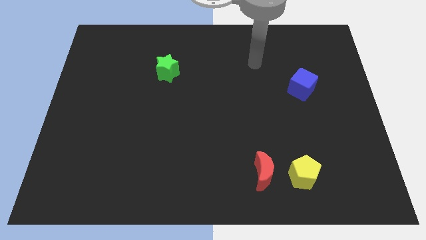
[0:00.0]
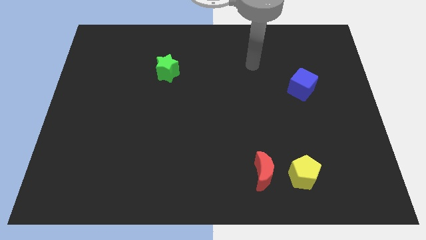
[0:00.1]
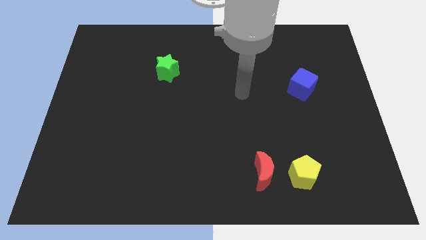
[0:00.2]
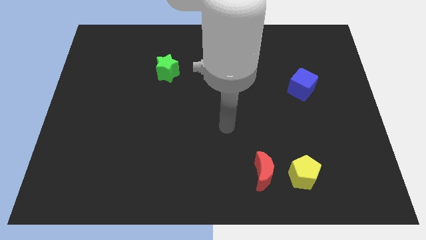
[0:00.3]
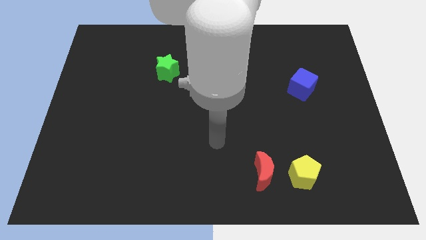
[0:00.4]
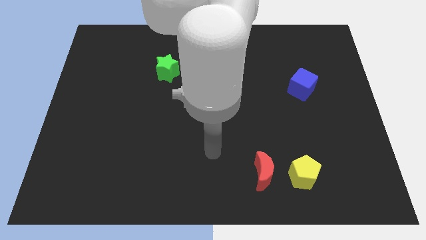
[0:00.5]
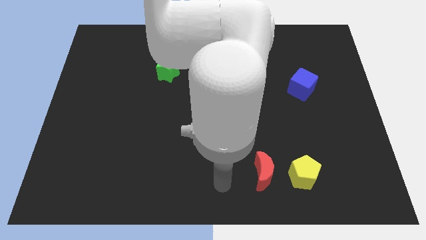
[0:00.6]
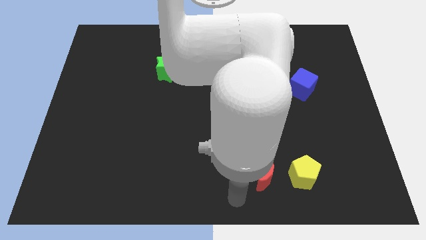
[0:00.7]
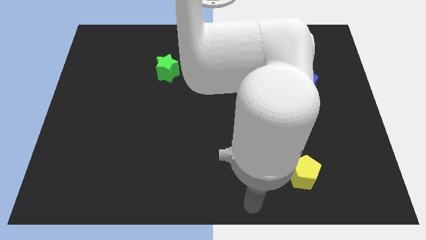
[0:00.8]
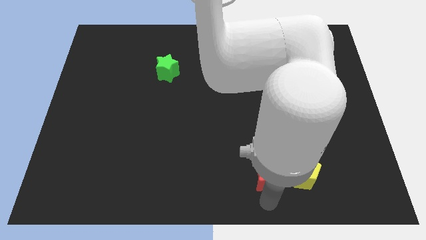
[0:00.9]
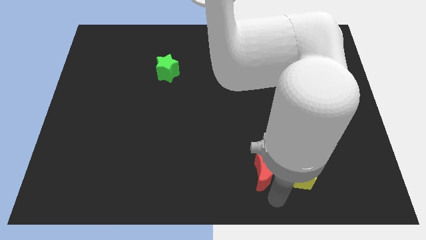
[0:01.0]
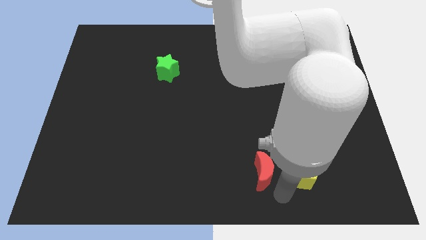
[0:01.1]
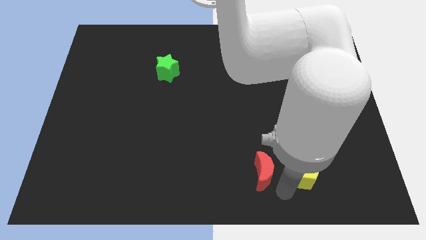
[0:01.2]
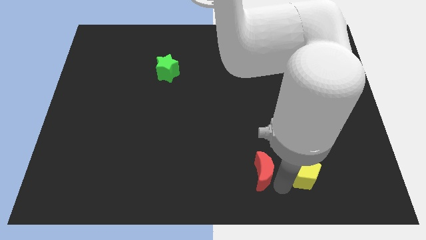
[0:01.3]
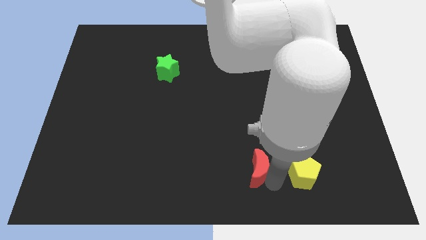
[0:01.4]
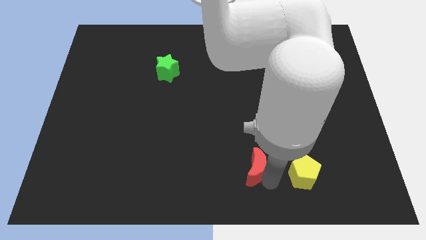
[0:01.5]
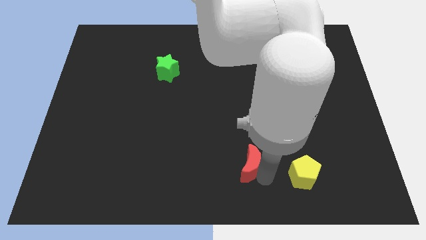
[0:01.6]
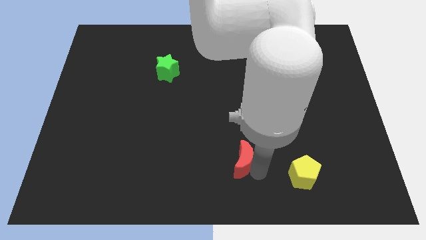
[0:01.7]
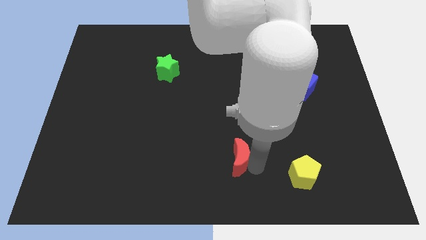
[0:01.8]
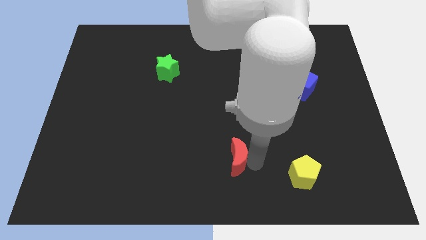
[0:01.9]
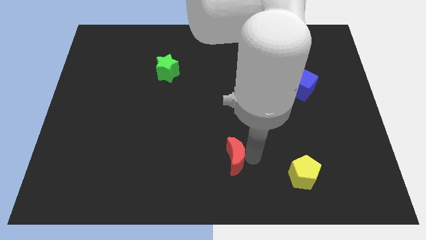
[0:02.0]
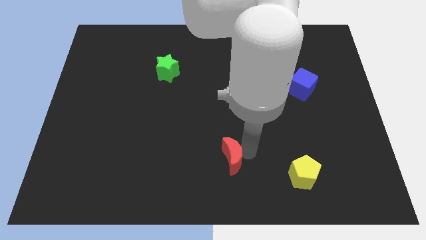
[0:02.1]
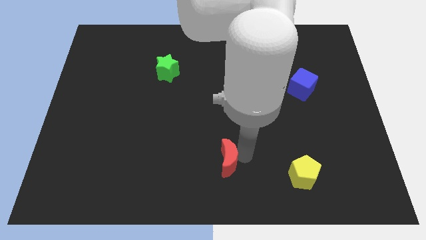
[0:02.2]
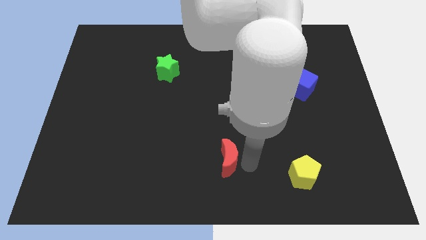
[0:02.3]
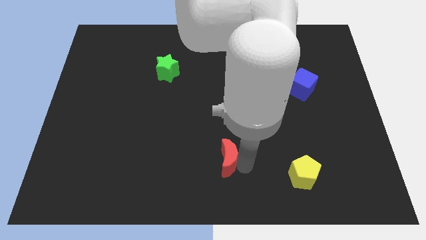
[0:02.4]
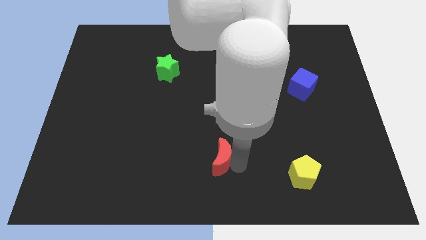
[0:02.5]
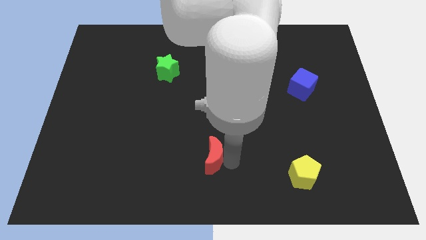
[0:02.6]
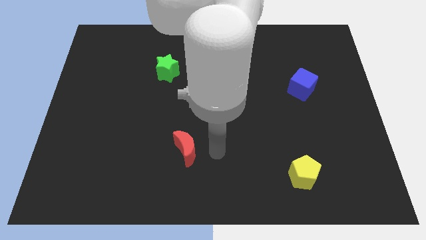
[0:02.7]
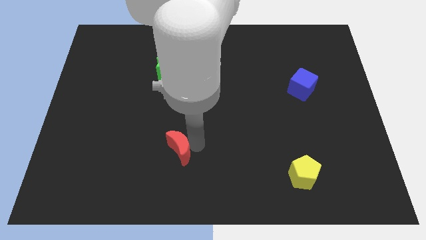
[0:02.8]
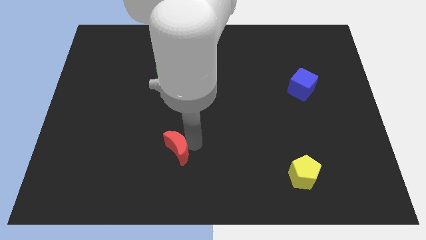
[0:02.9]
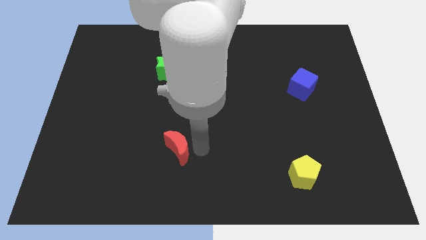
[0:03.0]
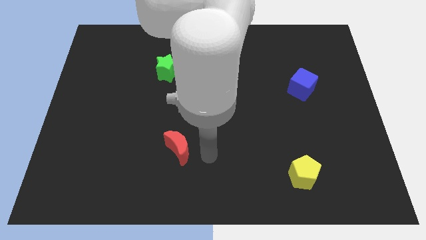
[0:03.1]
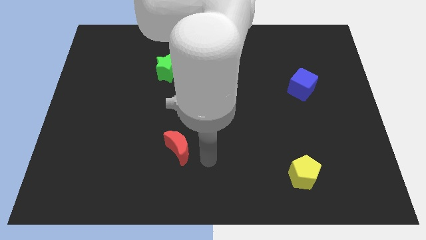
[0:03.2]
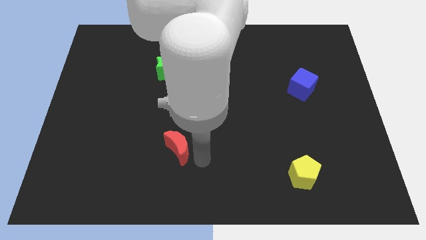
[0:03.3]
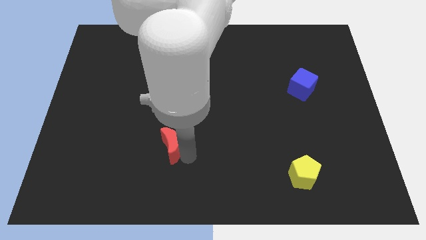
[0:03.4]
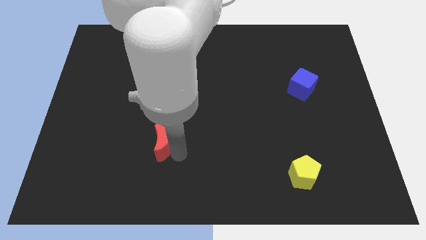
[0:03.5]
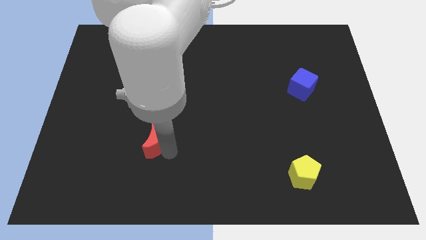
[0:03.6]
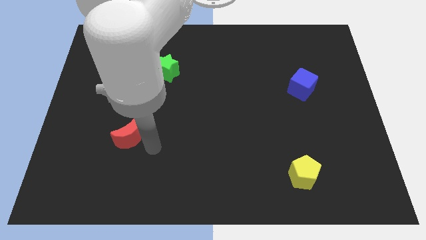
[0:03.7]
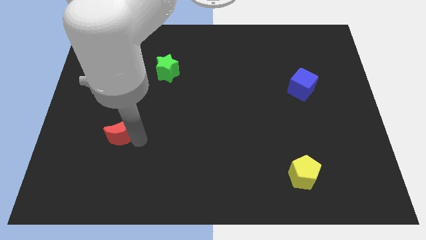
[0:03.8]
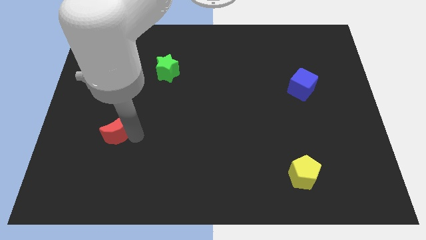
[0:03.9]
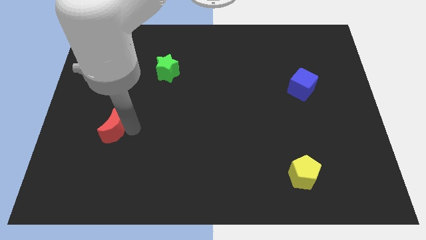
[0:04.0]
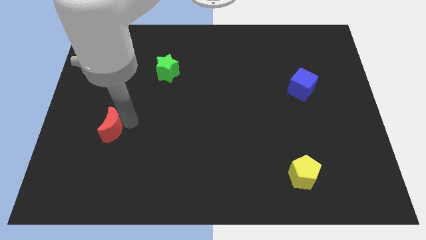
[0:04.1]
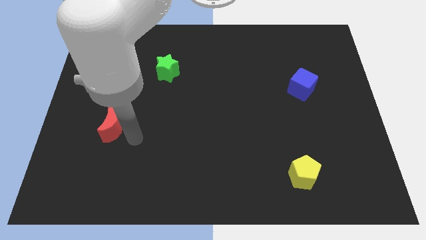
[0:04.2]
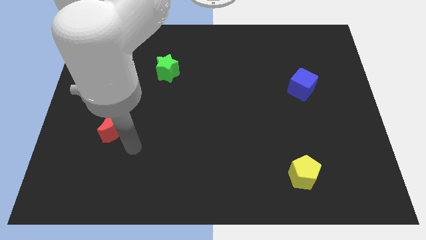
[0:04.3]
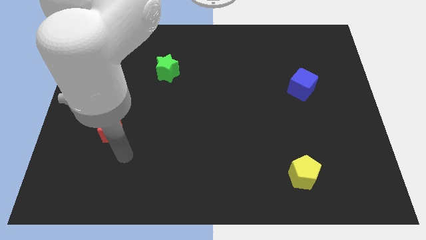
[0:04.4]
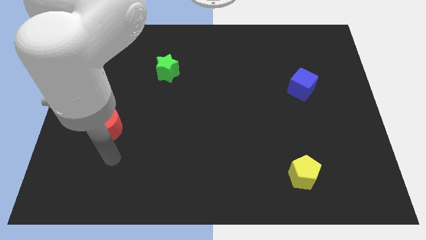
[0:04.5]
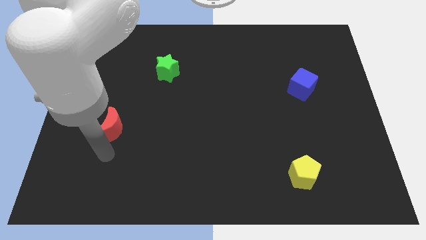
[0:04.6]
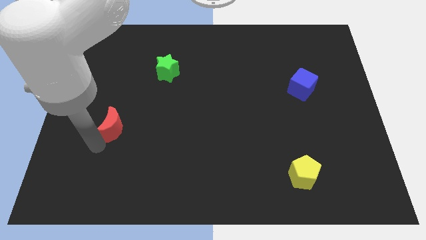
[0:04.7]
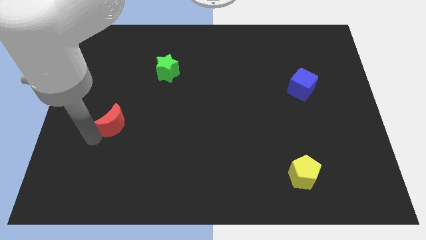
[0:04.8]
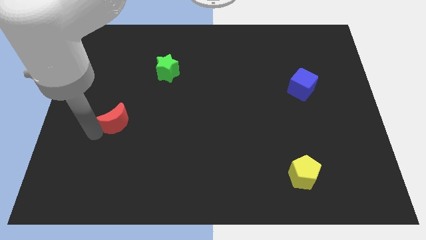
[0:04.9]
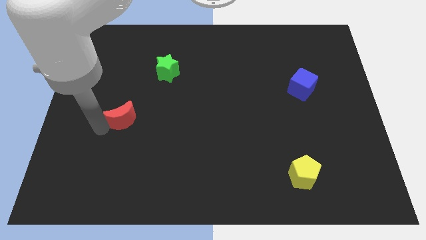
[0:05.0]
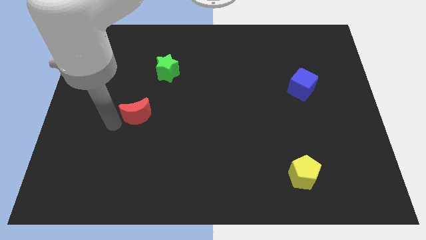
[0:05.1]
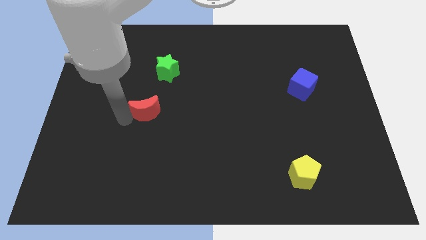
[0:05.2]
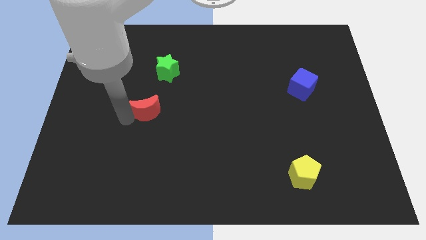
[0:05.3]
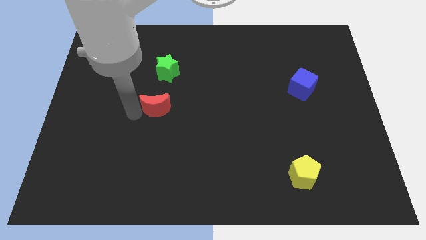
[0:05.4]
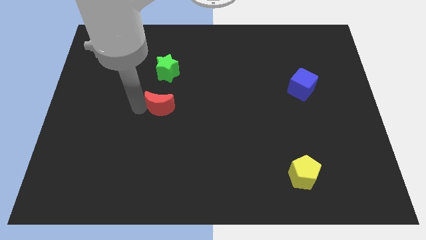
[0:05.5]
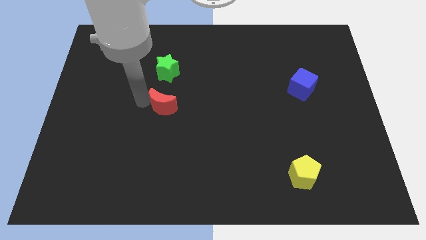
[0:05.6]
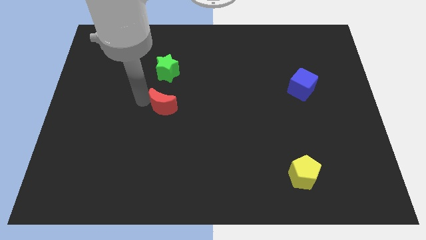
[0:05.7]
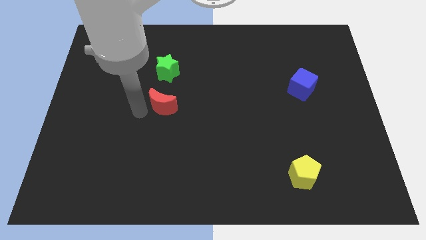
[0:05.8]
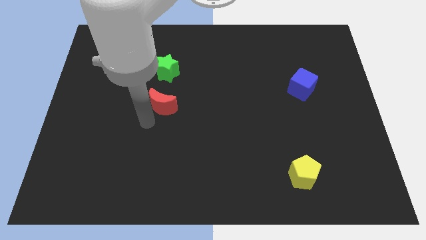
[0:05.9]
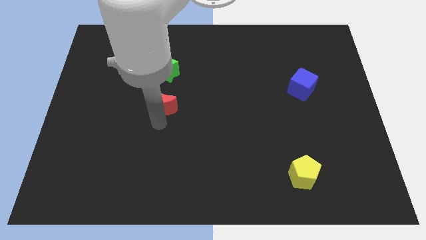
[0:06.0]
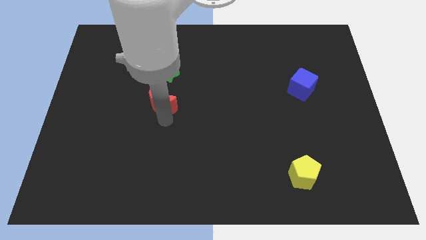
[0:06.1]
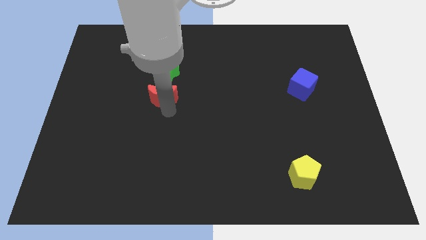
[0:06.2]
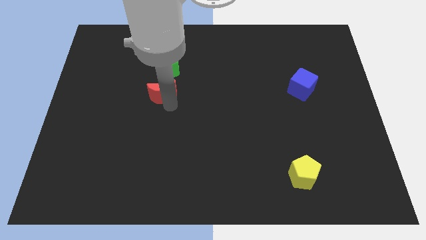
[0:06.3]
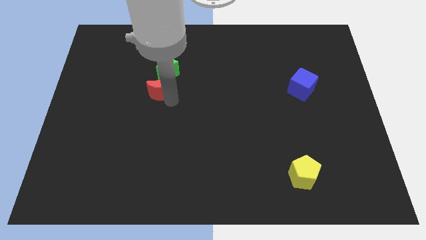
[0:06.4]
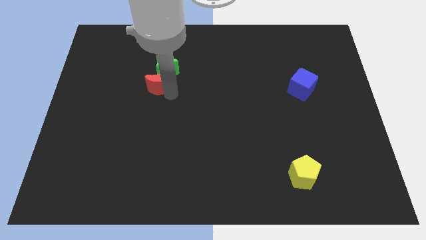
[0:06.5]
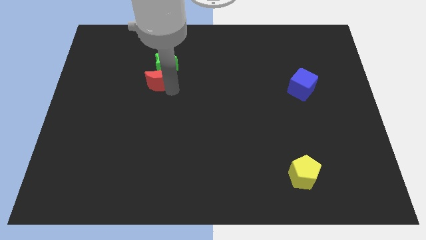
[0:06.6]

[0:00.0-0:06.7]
push the red moon close to the green block

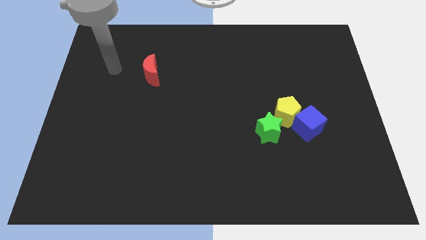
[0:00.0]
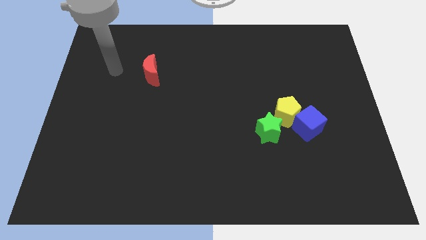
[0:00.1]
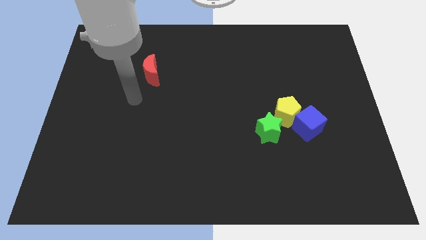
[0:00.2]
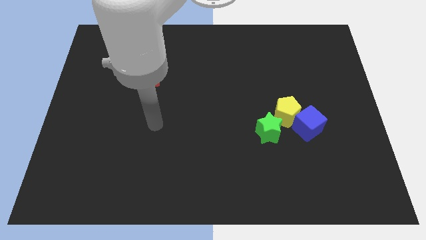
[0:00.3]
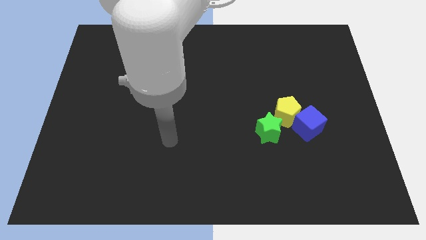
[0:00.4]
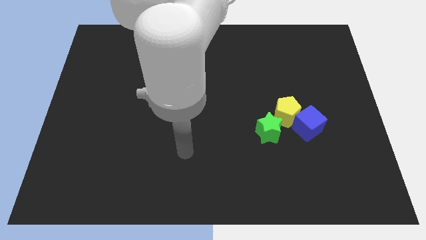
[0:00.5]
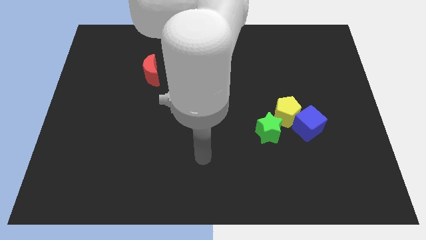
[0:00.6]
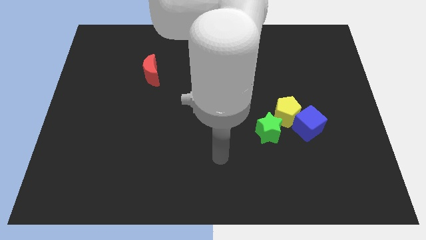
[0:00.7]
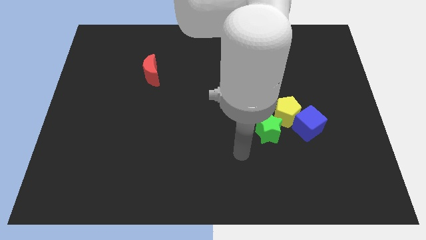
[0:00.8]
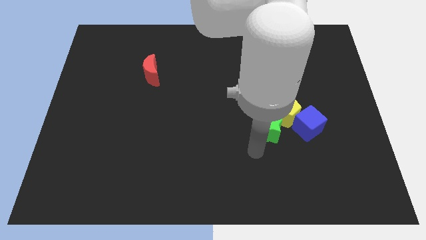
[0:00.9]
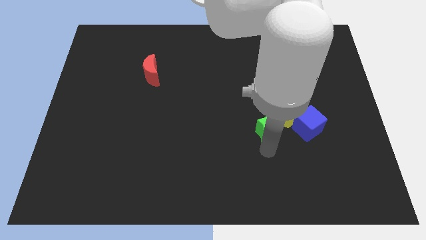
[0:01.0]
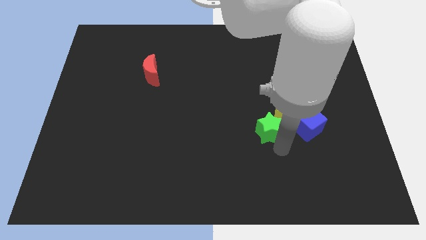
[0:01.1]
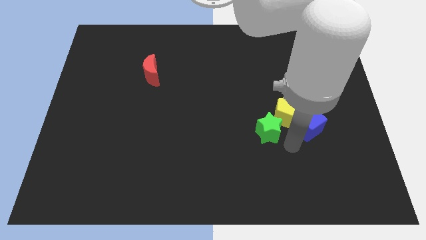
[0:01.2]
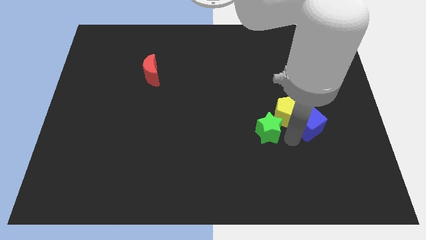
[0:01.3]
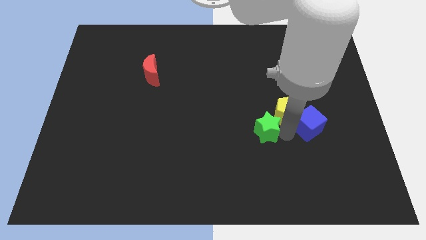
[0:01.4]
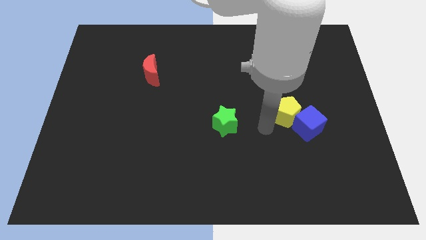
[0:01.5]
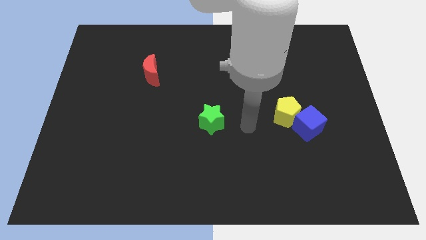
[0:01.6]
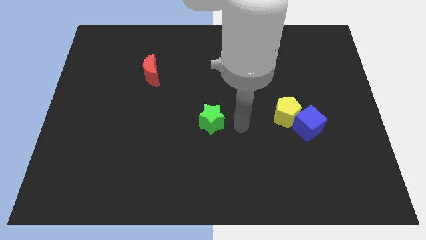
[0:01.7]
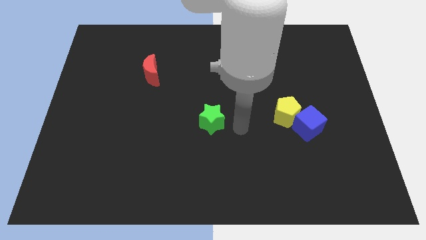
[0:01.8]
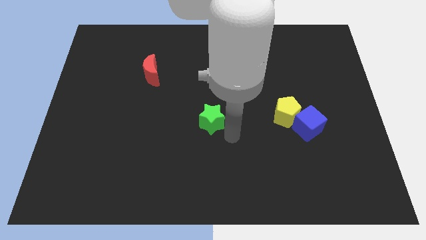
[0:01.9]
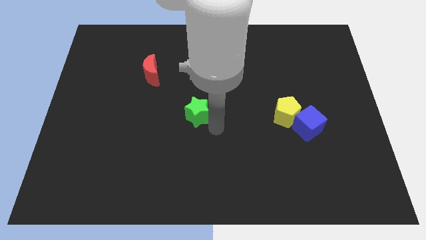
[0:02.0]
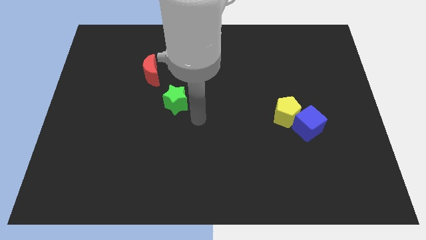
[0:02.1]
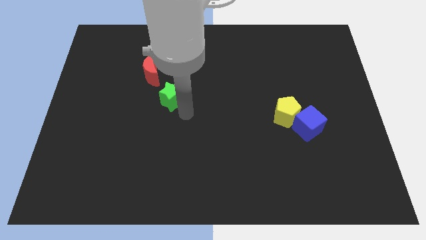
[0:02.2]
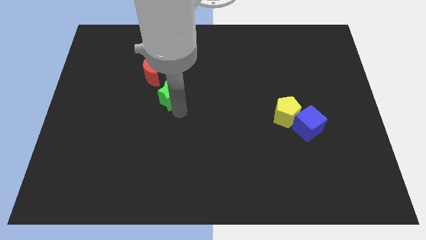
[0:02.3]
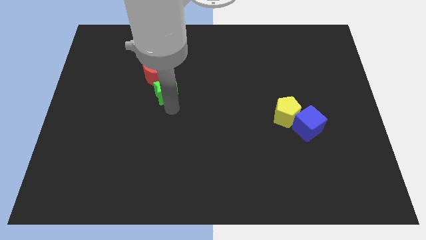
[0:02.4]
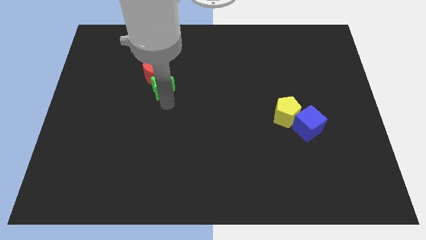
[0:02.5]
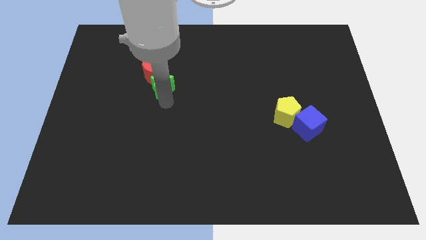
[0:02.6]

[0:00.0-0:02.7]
push the green block next to the red moon
